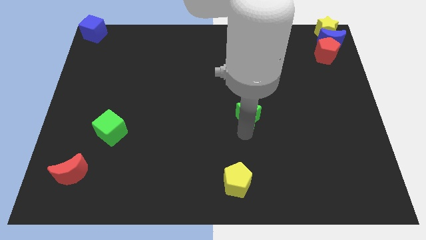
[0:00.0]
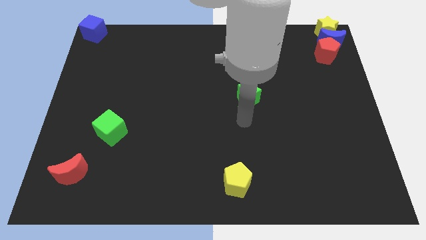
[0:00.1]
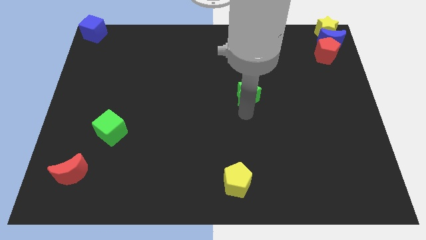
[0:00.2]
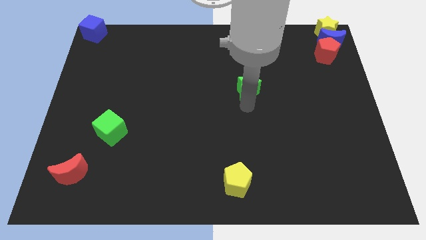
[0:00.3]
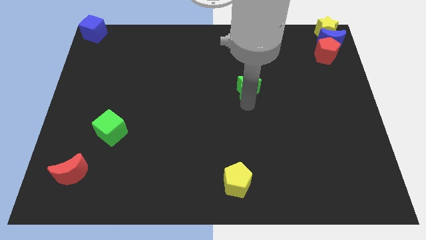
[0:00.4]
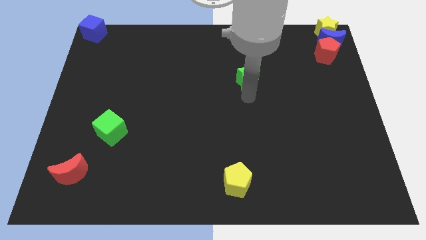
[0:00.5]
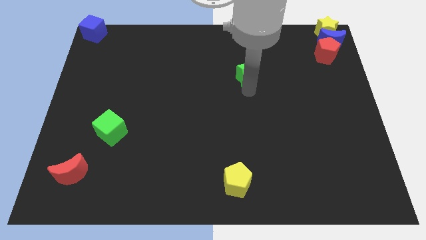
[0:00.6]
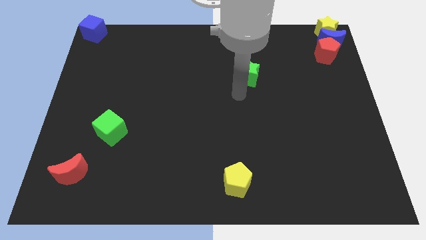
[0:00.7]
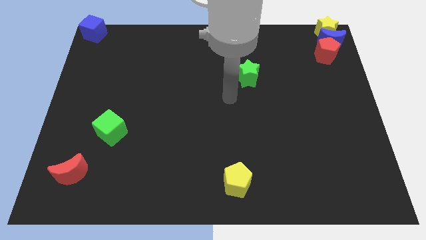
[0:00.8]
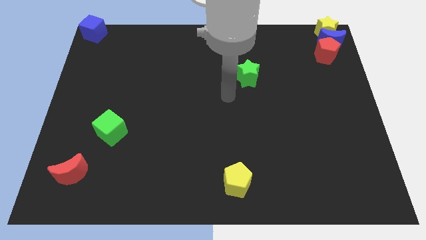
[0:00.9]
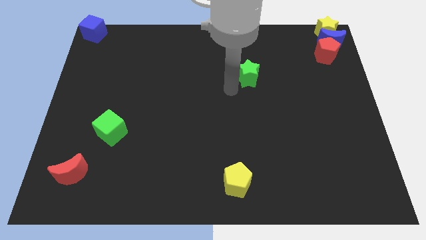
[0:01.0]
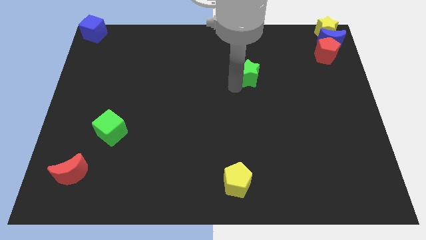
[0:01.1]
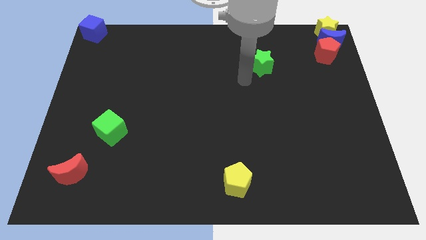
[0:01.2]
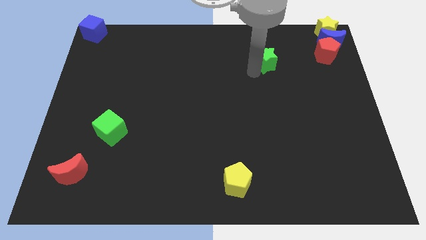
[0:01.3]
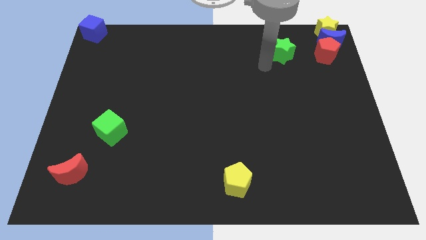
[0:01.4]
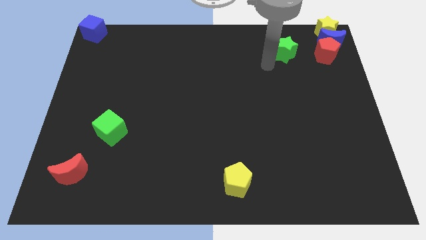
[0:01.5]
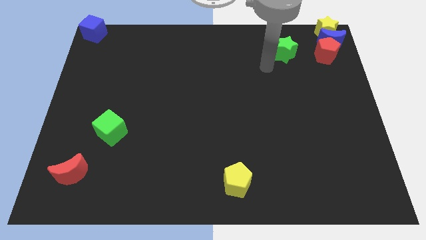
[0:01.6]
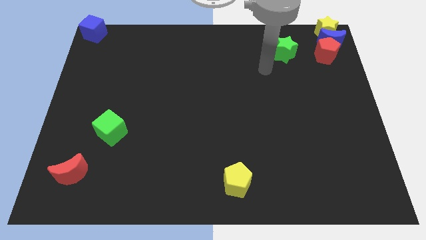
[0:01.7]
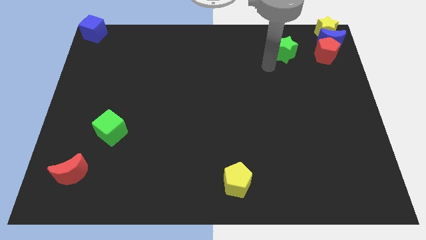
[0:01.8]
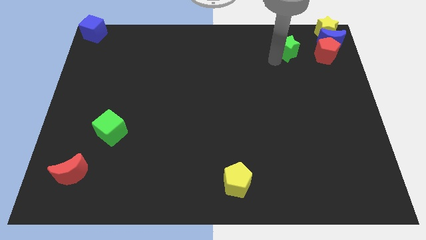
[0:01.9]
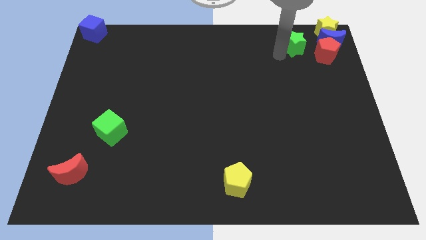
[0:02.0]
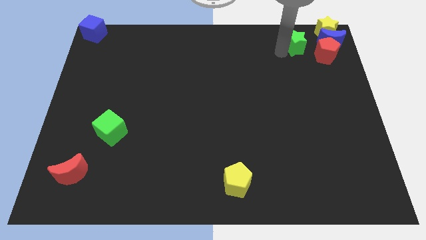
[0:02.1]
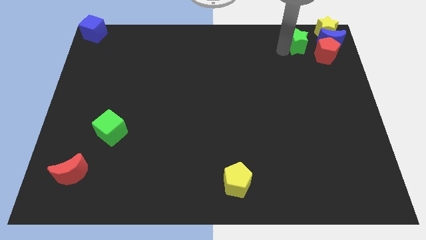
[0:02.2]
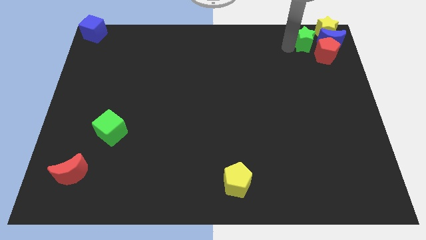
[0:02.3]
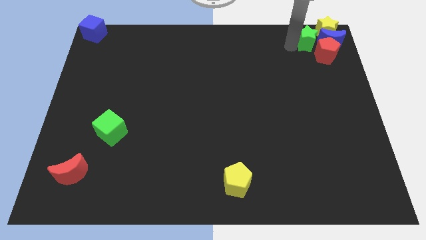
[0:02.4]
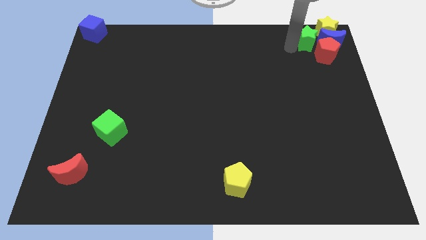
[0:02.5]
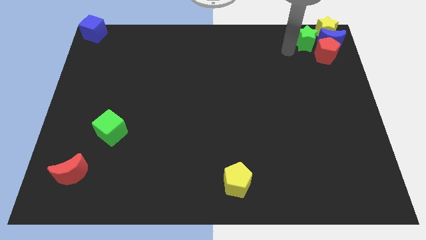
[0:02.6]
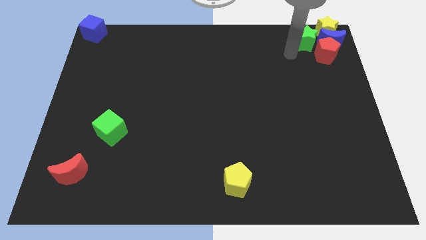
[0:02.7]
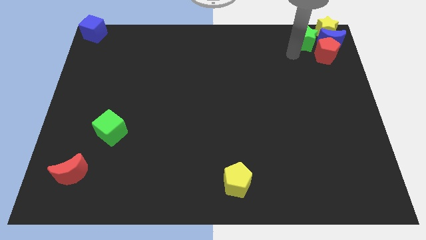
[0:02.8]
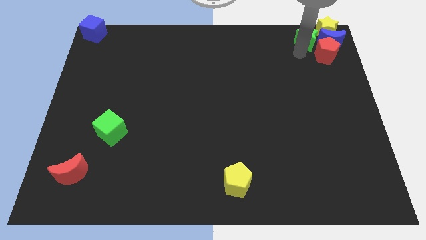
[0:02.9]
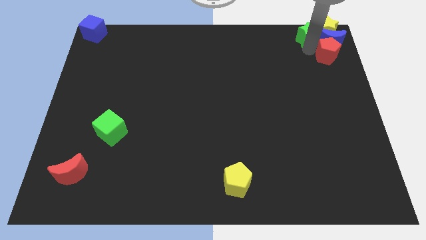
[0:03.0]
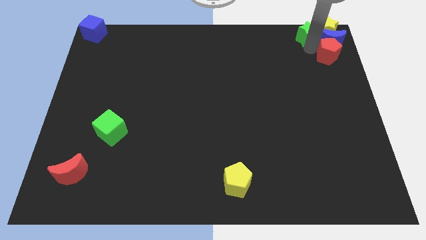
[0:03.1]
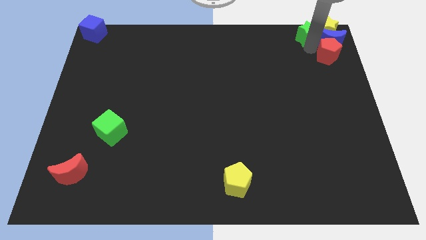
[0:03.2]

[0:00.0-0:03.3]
push the green star into the group of blocks

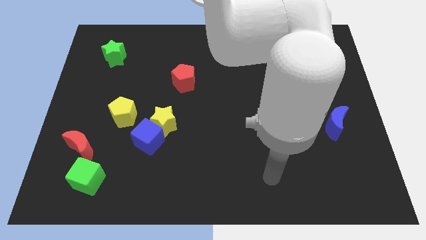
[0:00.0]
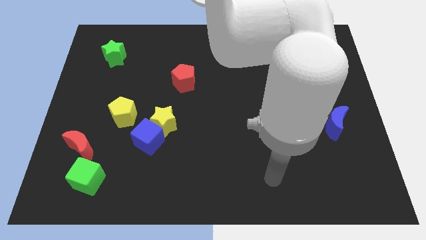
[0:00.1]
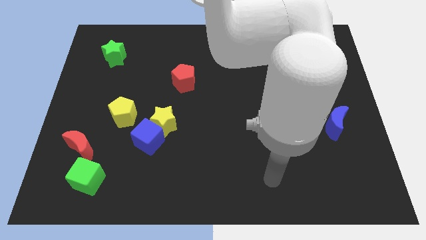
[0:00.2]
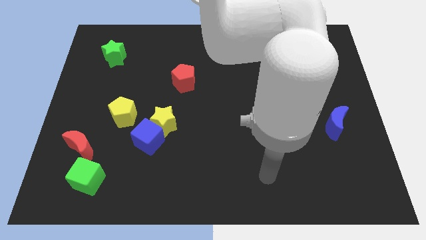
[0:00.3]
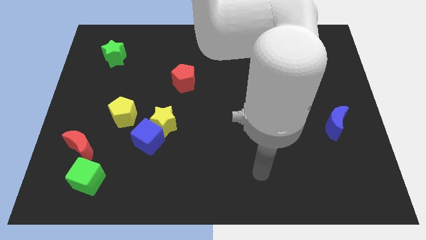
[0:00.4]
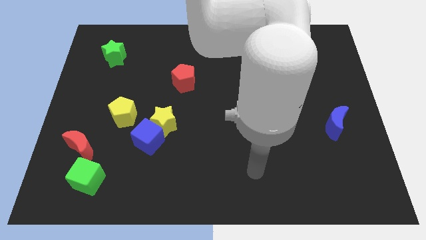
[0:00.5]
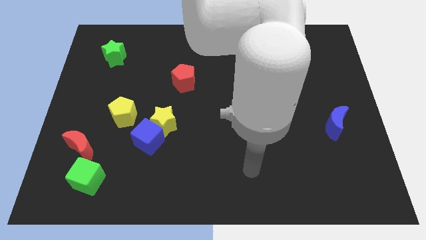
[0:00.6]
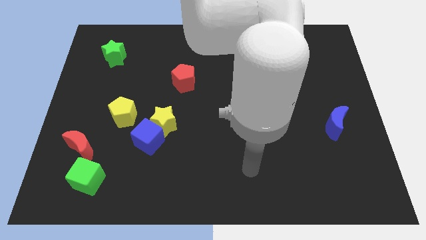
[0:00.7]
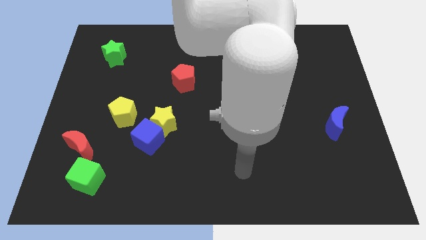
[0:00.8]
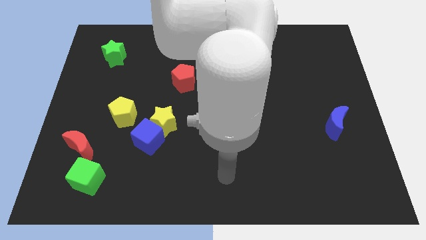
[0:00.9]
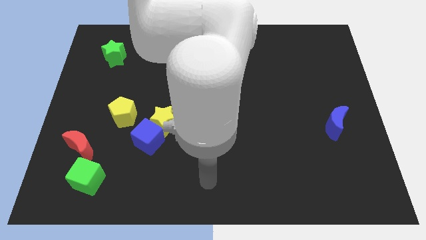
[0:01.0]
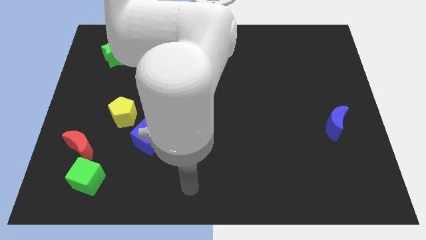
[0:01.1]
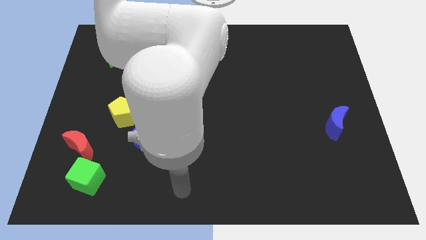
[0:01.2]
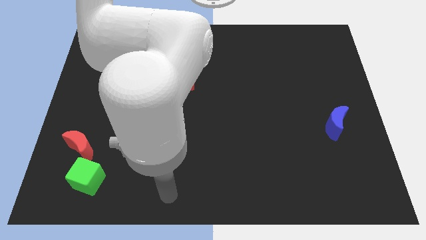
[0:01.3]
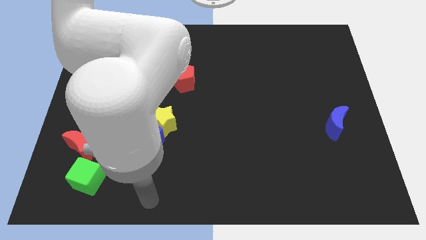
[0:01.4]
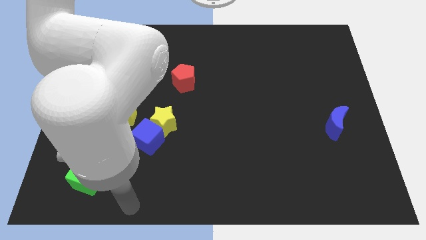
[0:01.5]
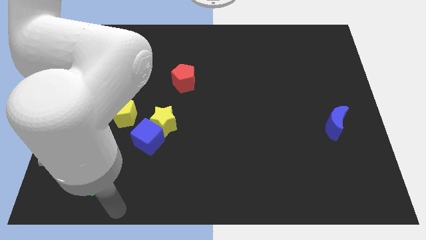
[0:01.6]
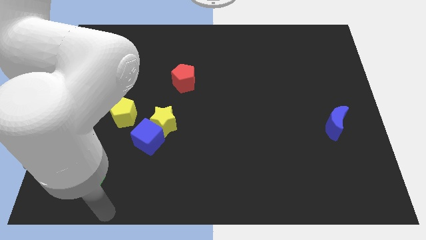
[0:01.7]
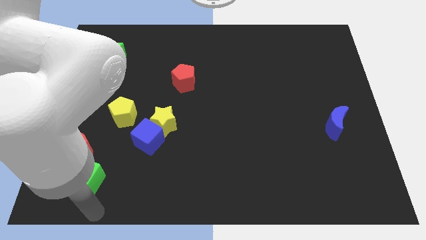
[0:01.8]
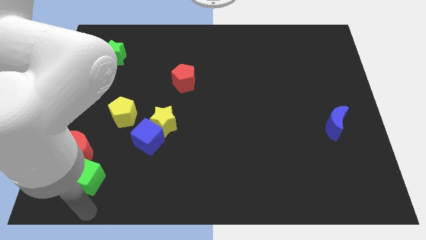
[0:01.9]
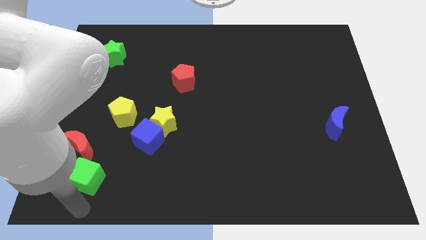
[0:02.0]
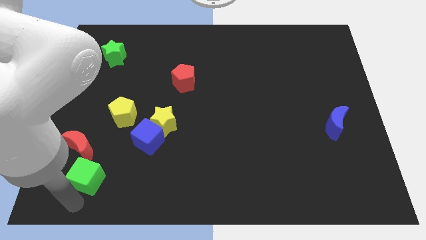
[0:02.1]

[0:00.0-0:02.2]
point the arm below the green cube

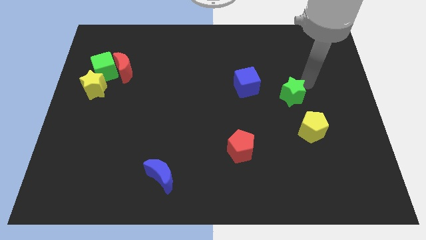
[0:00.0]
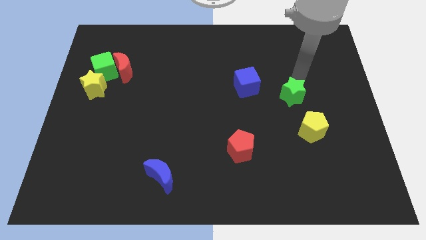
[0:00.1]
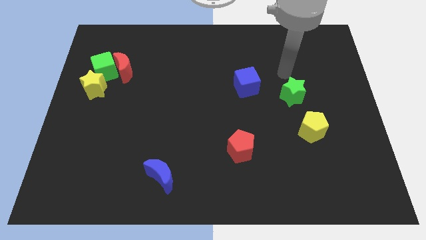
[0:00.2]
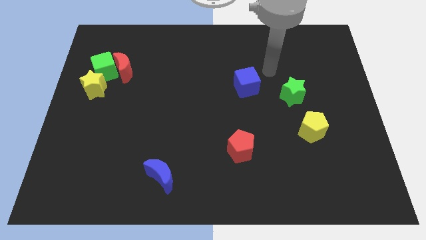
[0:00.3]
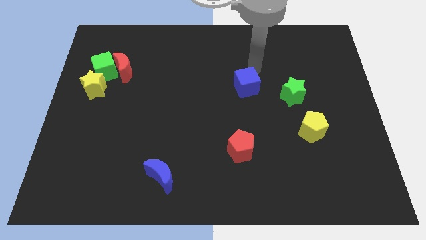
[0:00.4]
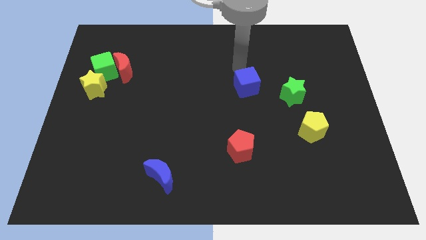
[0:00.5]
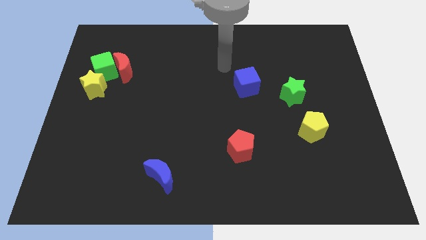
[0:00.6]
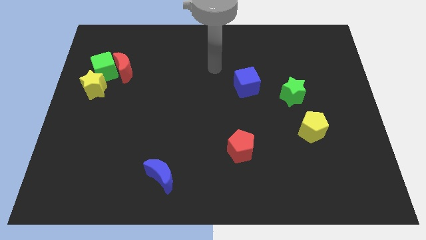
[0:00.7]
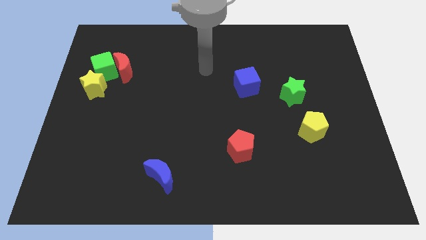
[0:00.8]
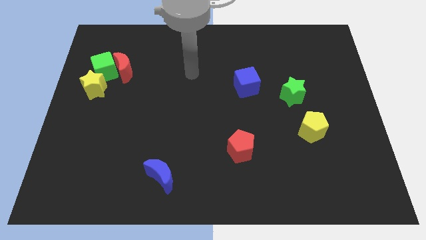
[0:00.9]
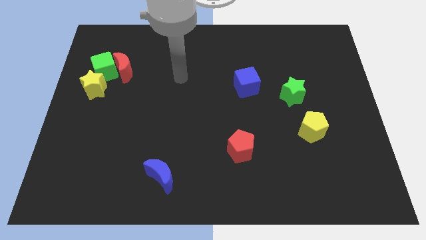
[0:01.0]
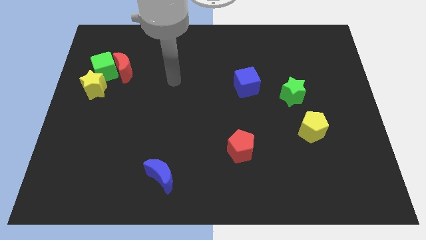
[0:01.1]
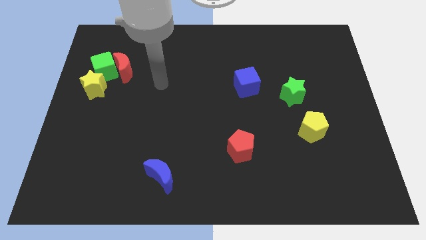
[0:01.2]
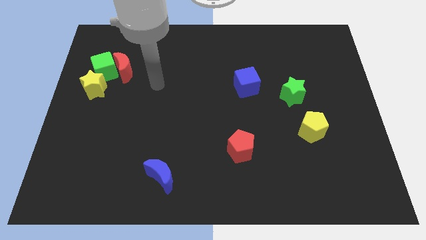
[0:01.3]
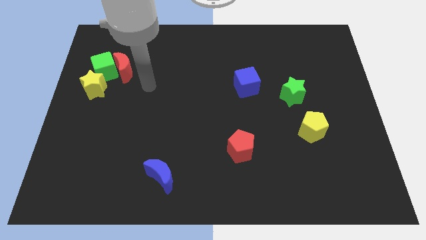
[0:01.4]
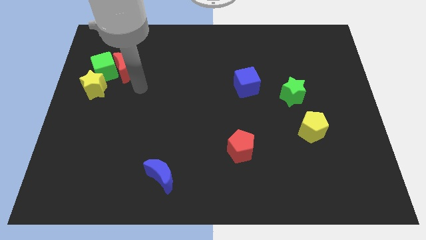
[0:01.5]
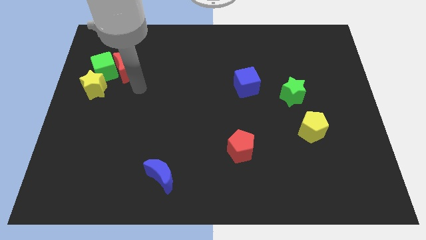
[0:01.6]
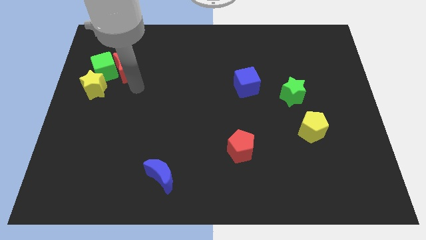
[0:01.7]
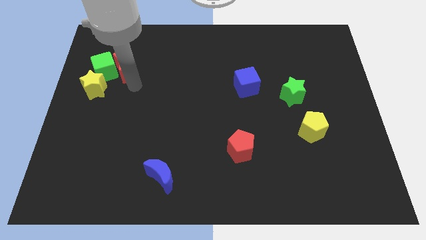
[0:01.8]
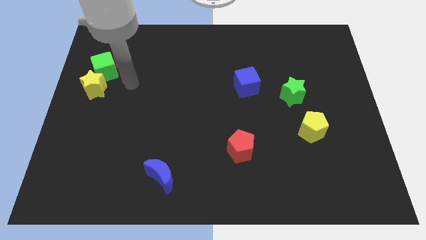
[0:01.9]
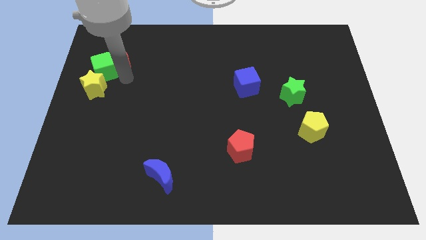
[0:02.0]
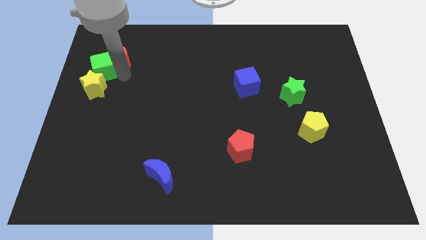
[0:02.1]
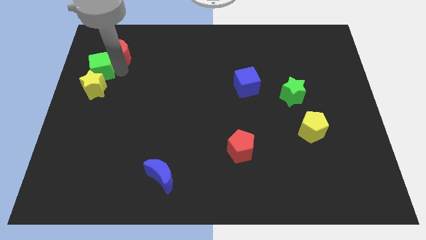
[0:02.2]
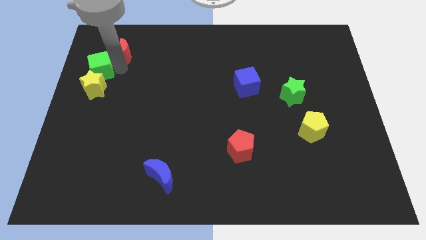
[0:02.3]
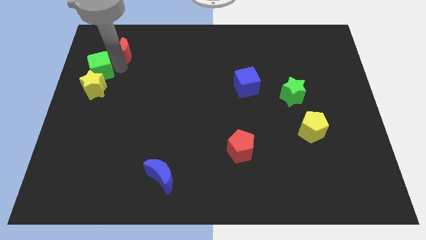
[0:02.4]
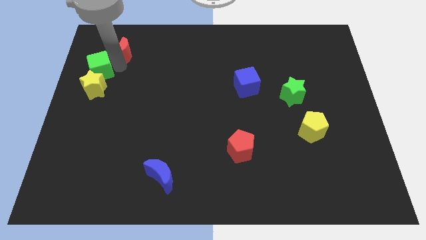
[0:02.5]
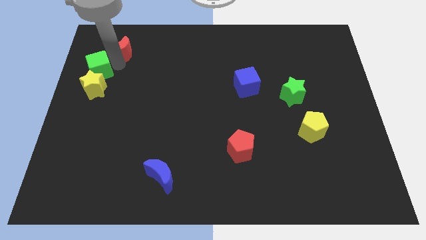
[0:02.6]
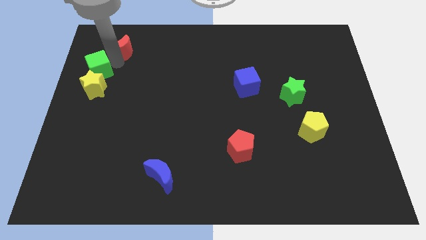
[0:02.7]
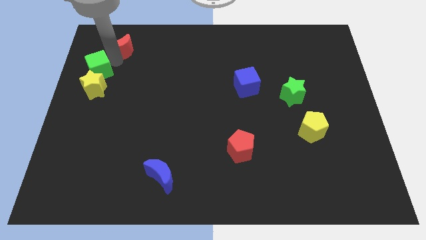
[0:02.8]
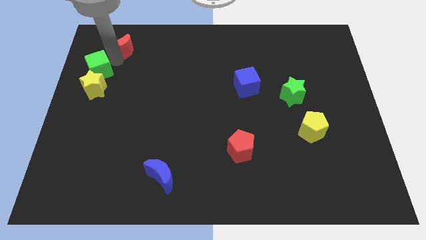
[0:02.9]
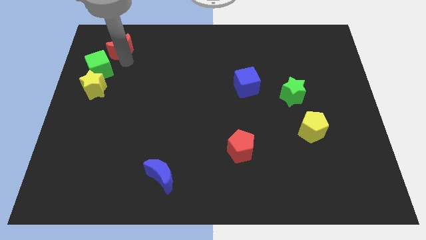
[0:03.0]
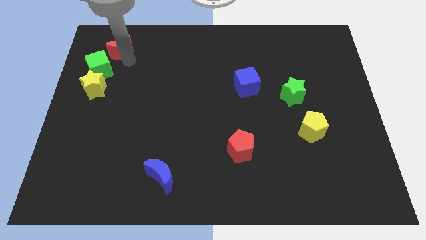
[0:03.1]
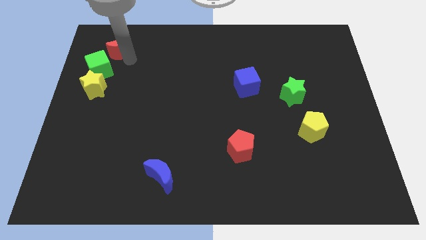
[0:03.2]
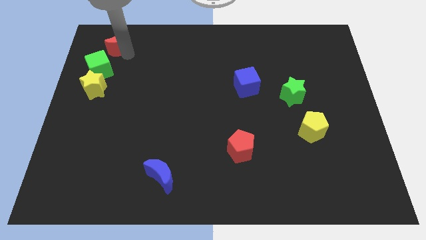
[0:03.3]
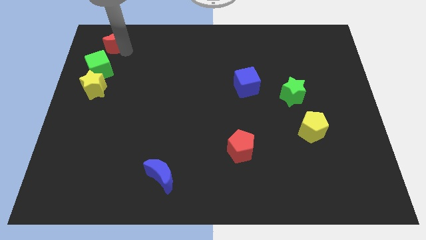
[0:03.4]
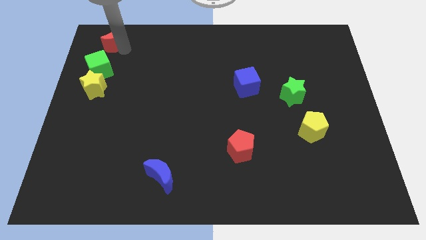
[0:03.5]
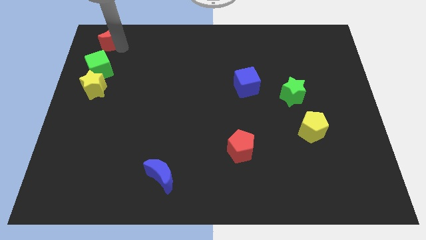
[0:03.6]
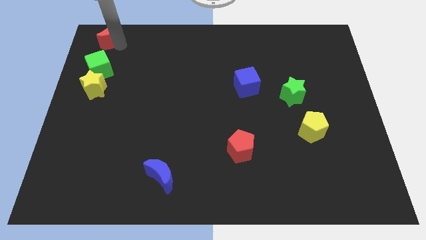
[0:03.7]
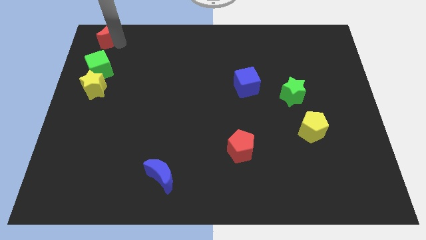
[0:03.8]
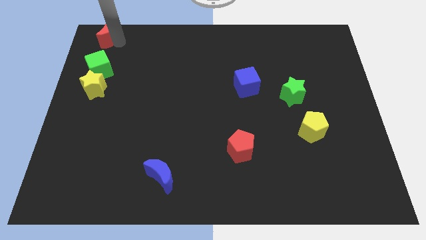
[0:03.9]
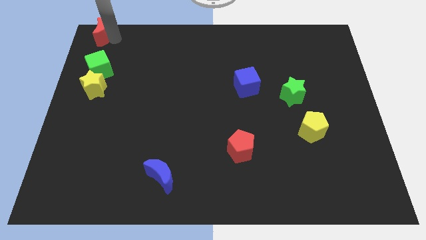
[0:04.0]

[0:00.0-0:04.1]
separate the red moon from the green cube
